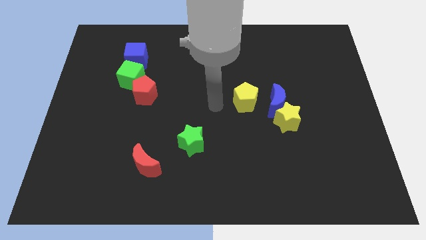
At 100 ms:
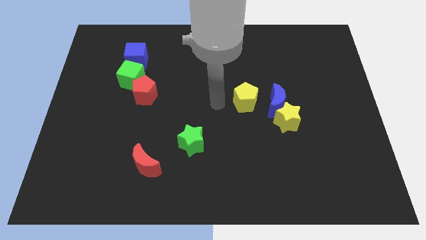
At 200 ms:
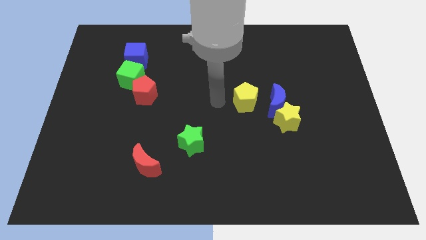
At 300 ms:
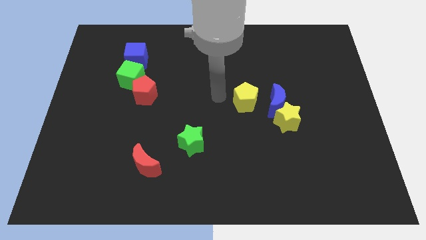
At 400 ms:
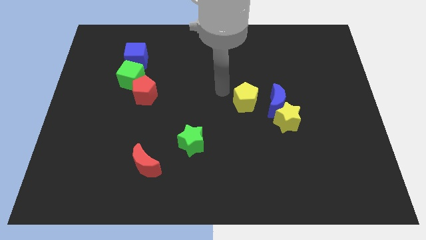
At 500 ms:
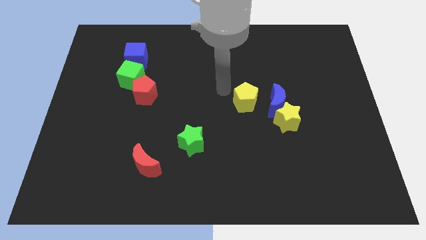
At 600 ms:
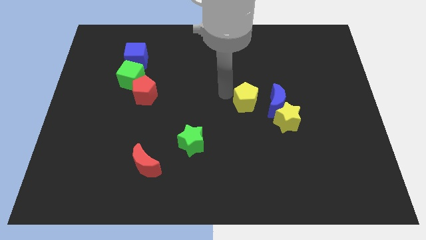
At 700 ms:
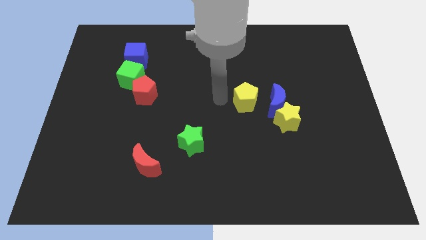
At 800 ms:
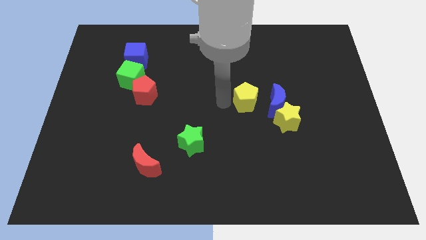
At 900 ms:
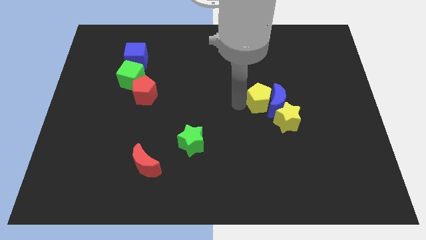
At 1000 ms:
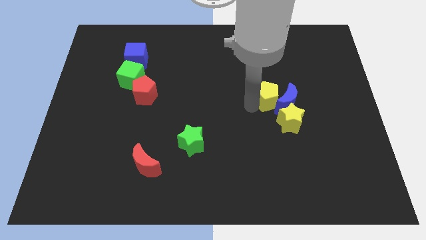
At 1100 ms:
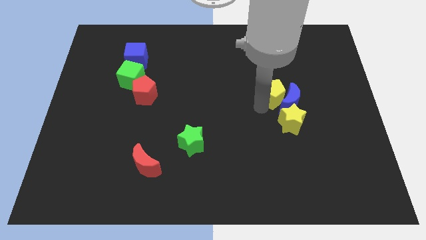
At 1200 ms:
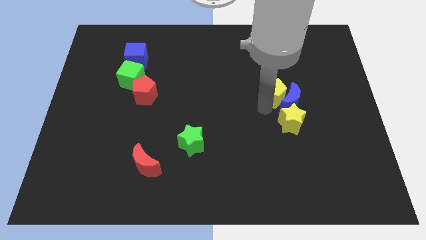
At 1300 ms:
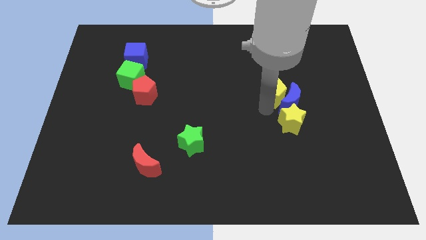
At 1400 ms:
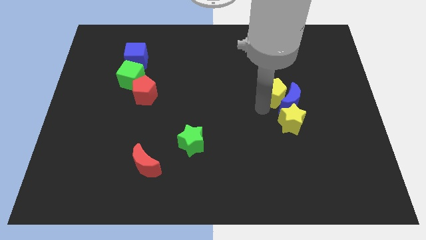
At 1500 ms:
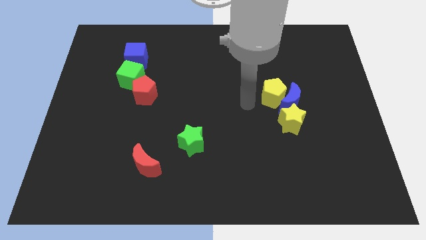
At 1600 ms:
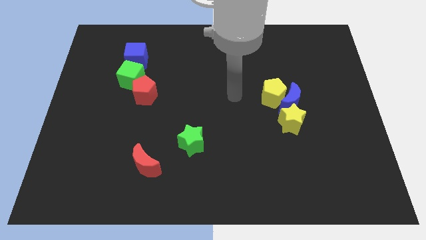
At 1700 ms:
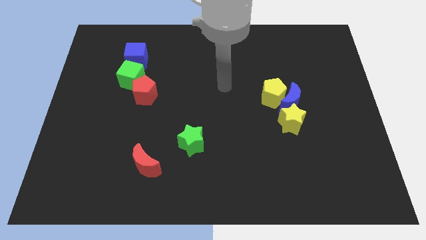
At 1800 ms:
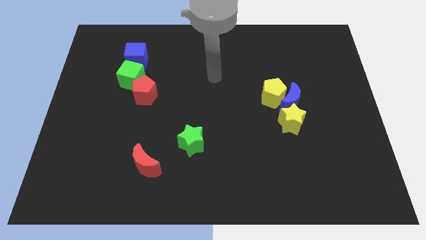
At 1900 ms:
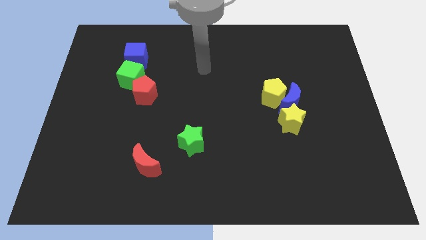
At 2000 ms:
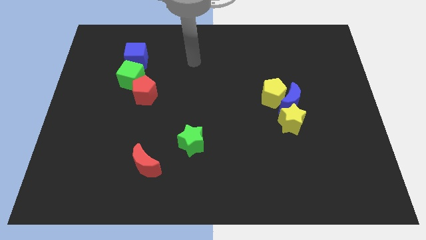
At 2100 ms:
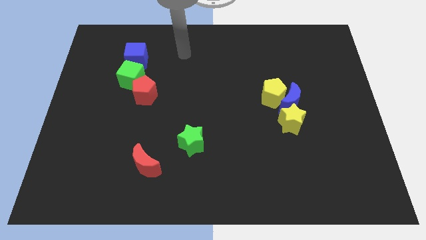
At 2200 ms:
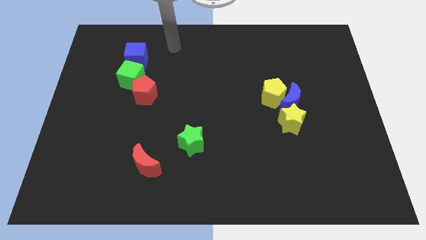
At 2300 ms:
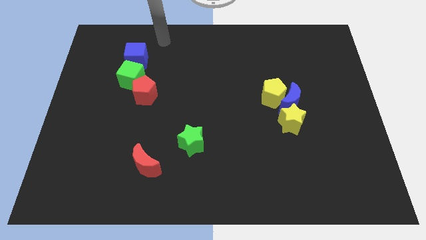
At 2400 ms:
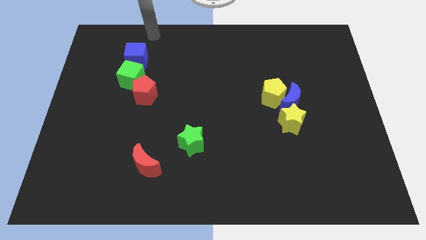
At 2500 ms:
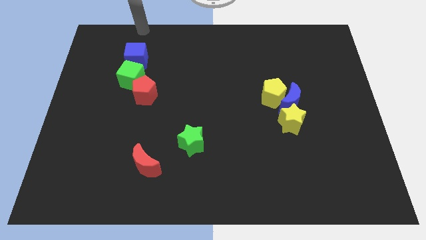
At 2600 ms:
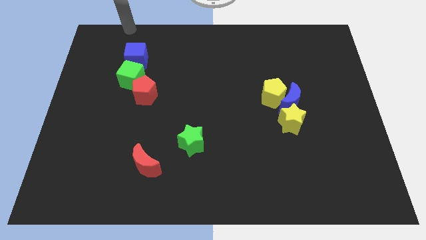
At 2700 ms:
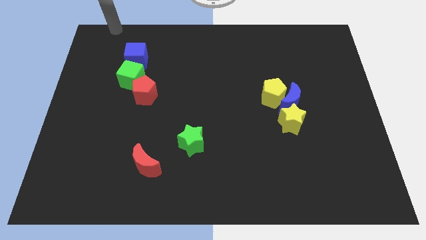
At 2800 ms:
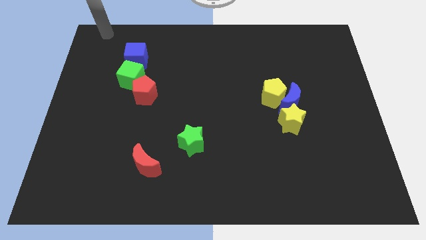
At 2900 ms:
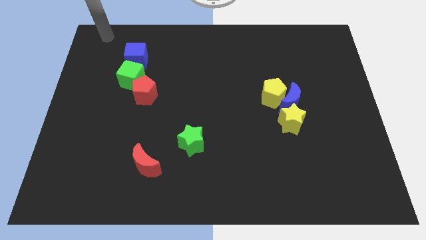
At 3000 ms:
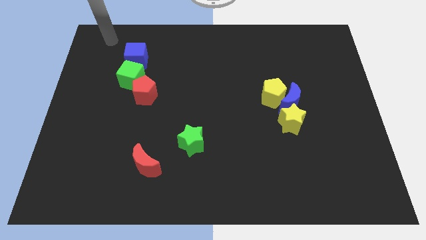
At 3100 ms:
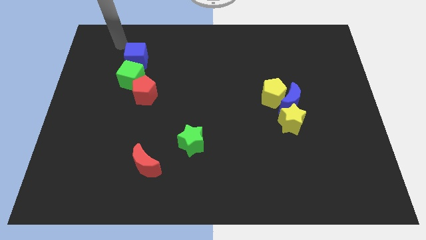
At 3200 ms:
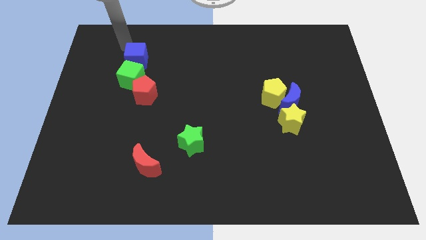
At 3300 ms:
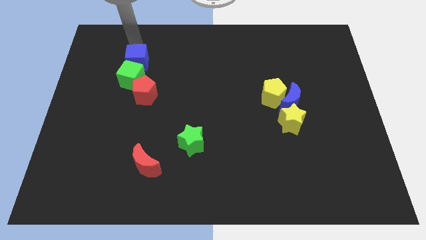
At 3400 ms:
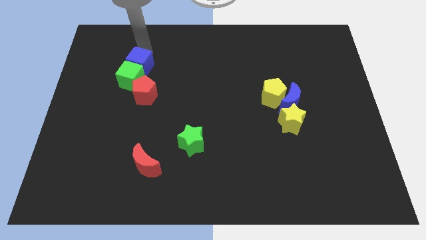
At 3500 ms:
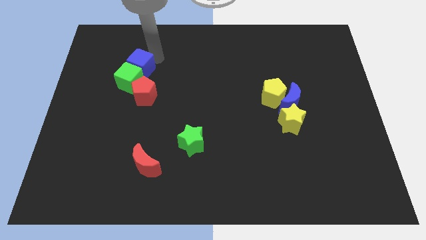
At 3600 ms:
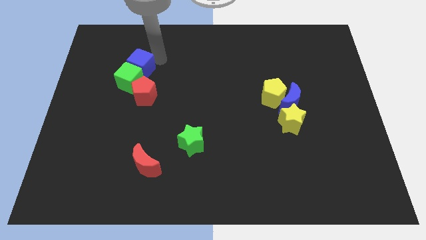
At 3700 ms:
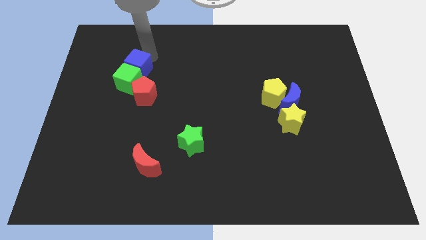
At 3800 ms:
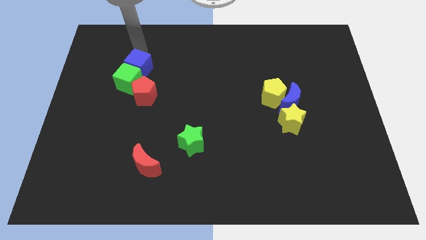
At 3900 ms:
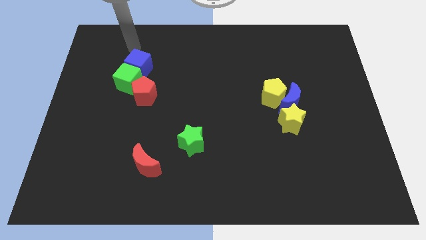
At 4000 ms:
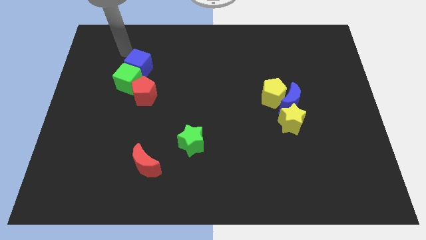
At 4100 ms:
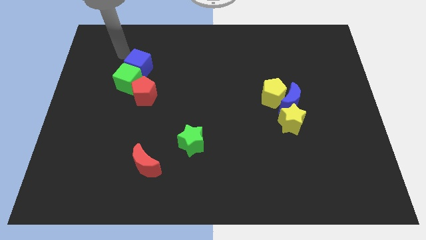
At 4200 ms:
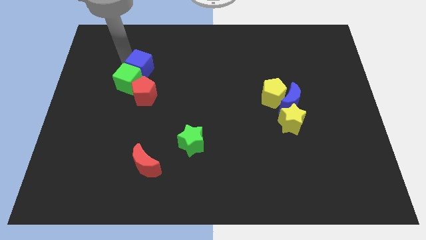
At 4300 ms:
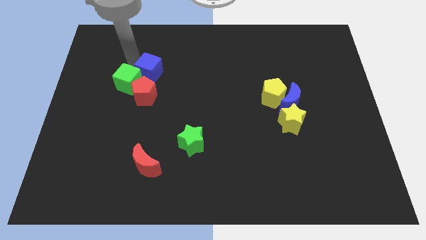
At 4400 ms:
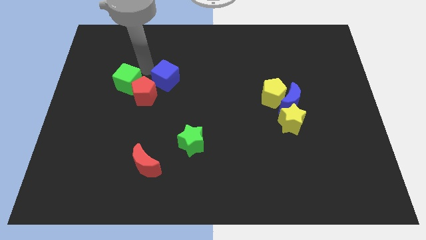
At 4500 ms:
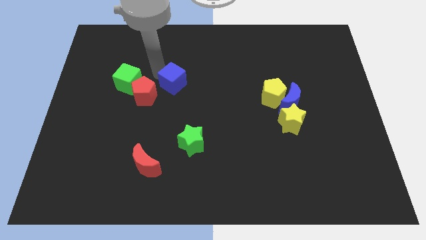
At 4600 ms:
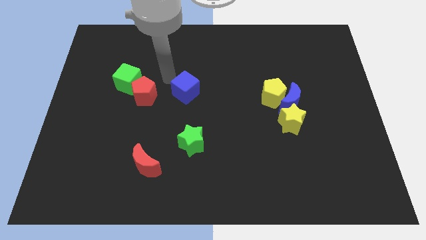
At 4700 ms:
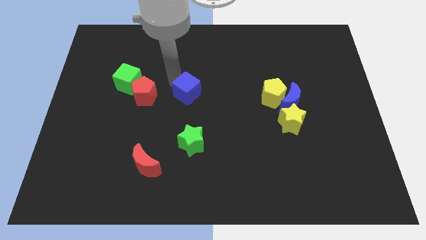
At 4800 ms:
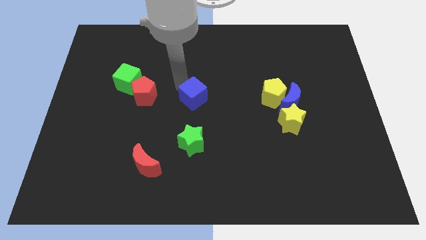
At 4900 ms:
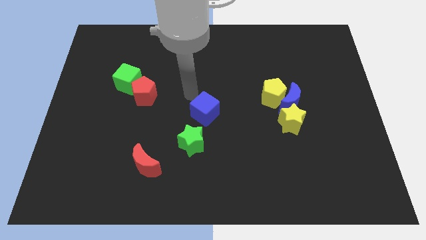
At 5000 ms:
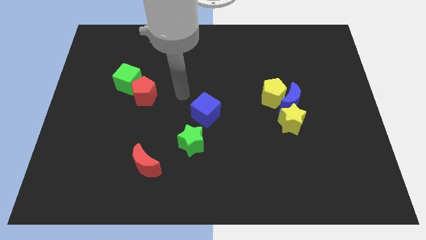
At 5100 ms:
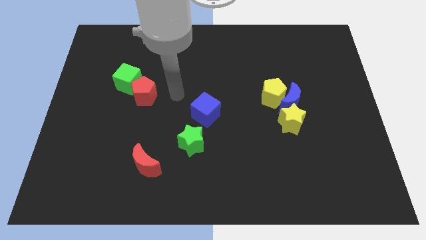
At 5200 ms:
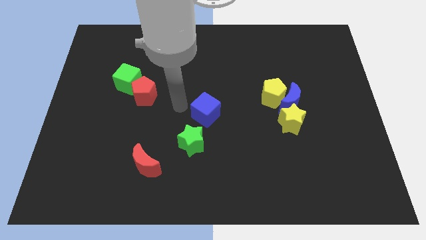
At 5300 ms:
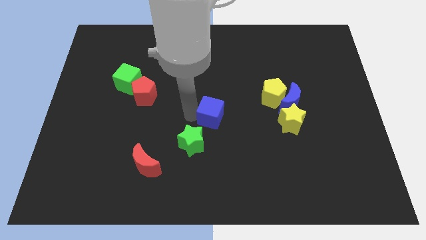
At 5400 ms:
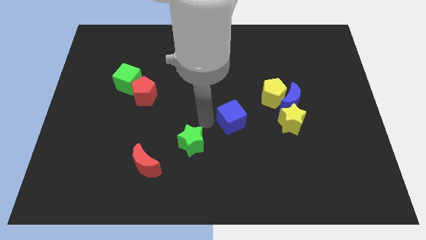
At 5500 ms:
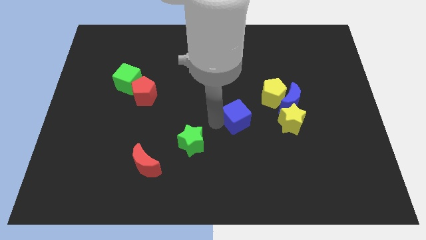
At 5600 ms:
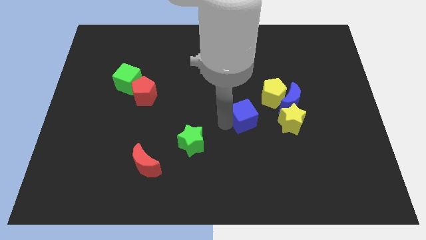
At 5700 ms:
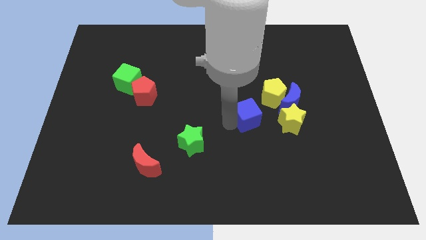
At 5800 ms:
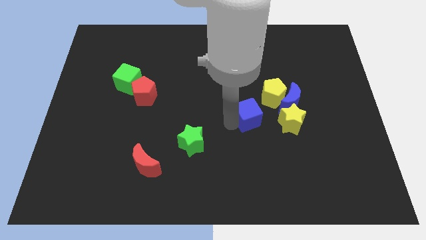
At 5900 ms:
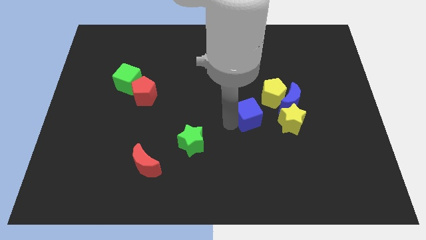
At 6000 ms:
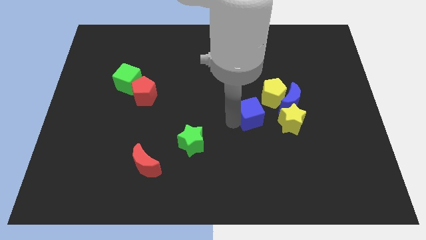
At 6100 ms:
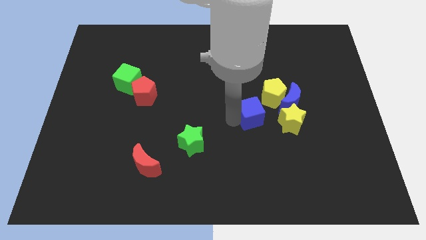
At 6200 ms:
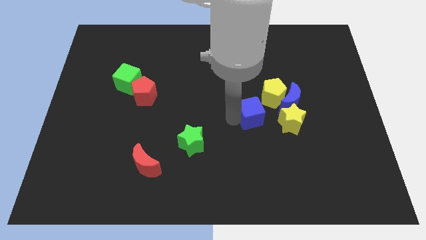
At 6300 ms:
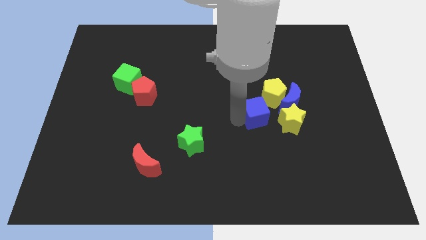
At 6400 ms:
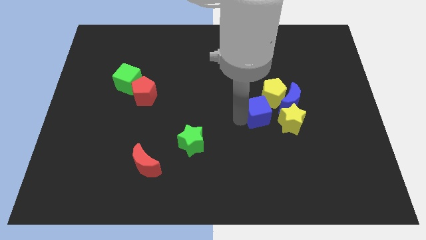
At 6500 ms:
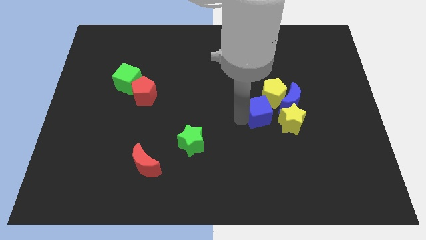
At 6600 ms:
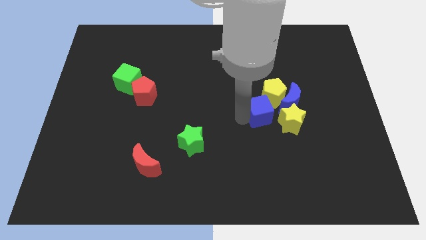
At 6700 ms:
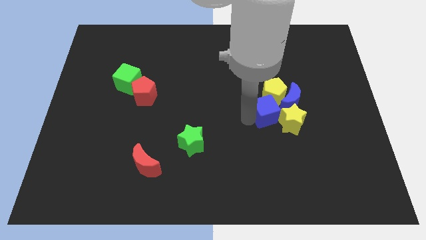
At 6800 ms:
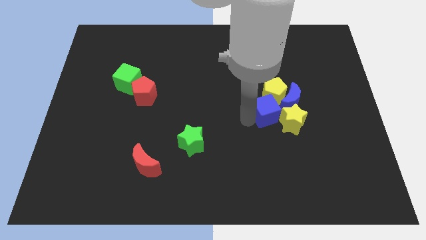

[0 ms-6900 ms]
group up the yellow pentagon blue crescent yellow star and blue cube at the right side of the table

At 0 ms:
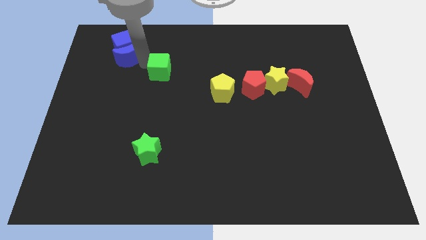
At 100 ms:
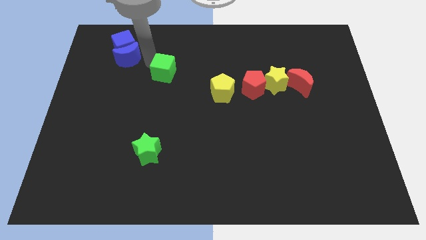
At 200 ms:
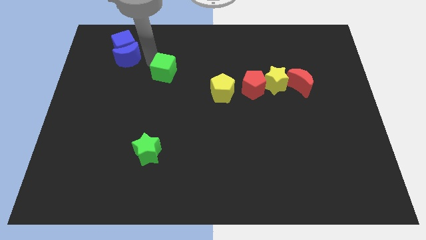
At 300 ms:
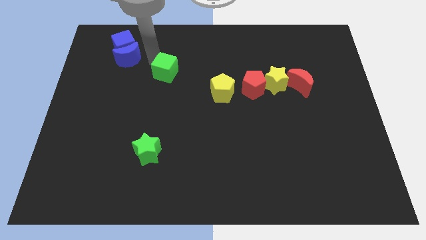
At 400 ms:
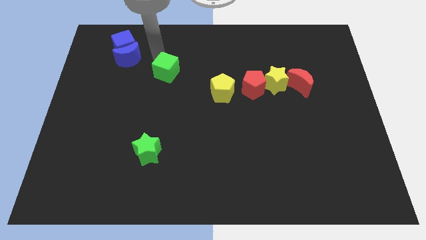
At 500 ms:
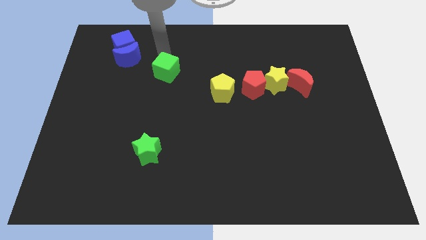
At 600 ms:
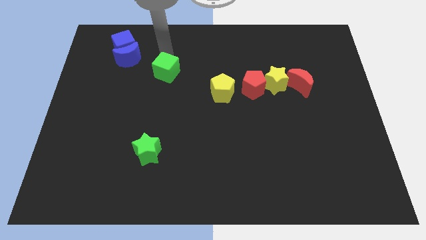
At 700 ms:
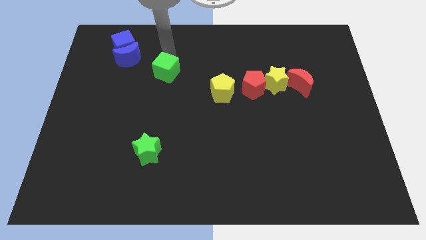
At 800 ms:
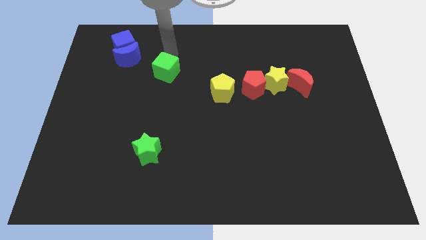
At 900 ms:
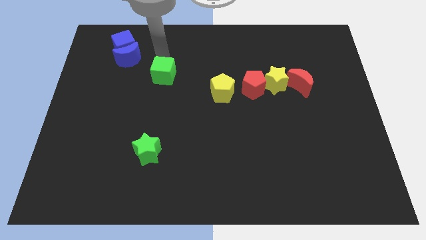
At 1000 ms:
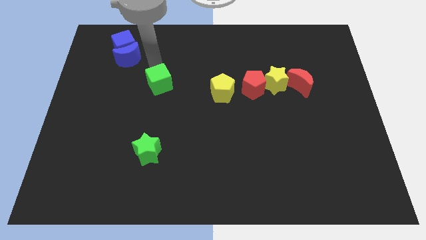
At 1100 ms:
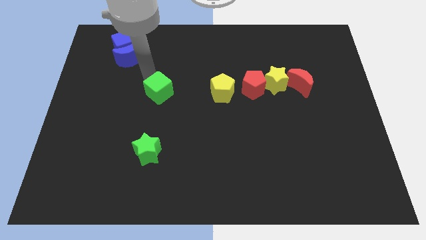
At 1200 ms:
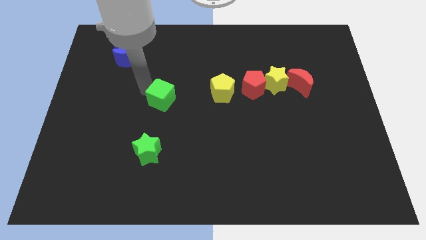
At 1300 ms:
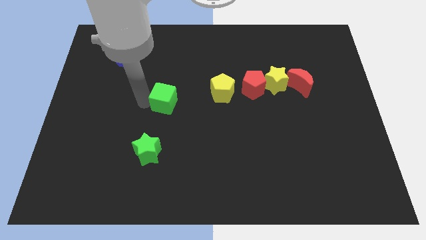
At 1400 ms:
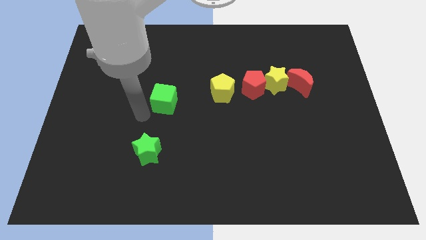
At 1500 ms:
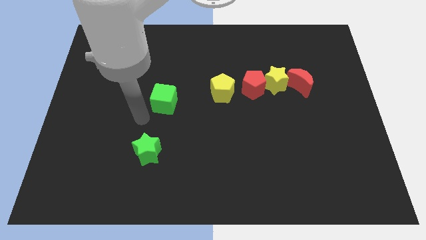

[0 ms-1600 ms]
place the green cube to the top of the green star

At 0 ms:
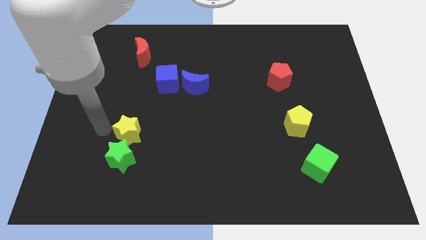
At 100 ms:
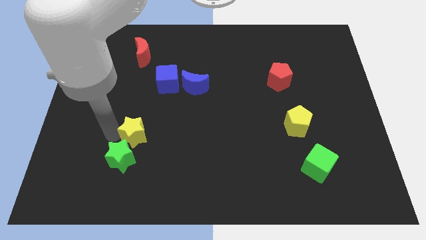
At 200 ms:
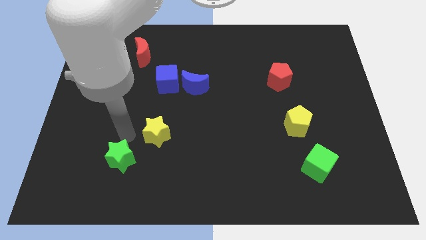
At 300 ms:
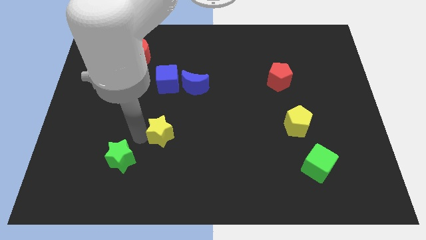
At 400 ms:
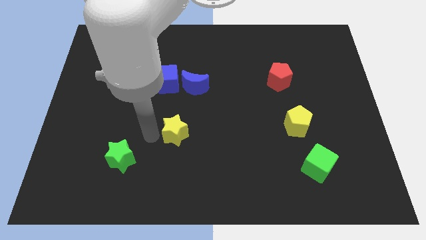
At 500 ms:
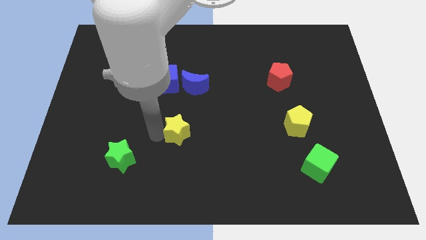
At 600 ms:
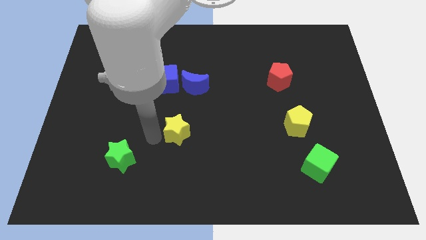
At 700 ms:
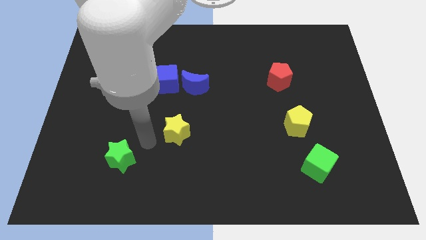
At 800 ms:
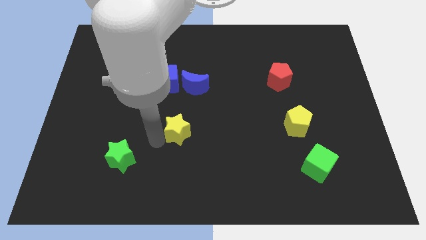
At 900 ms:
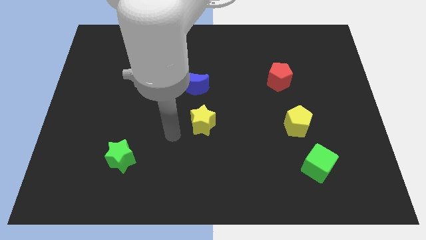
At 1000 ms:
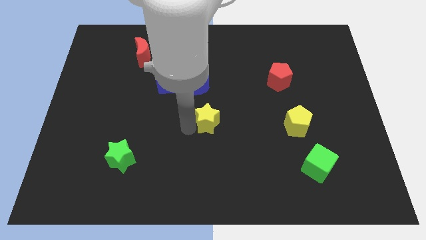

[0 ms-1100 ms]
push the yellow star towards the center
